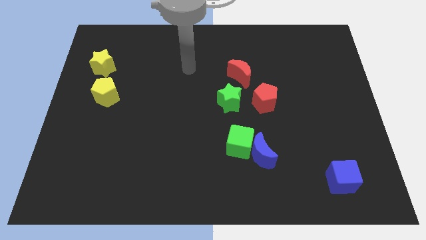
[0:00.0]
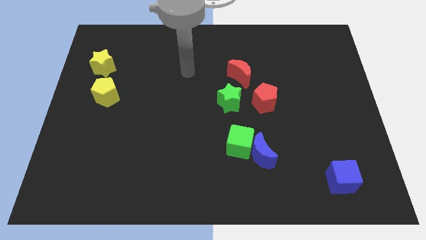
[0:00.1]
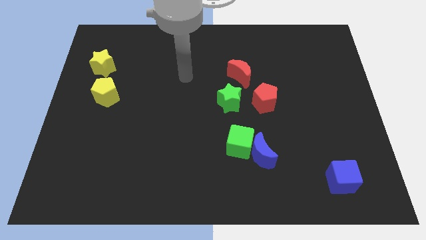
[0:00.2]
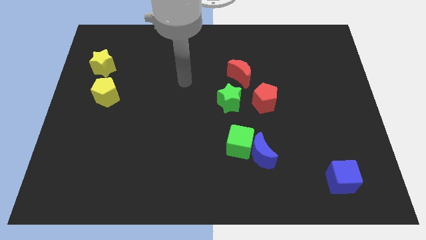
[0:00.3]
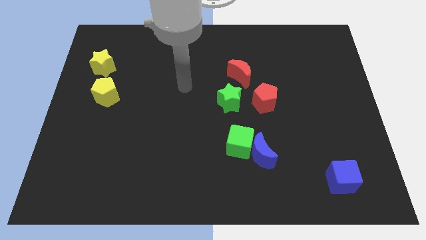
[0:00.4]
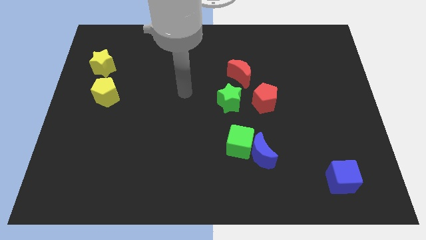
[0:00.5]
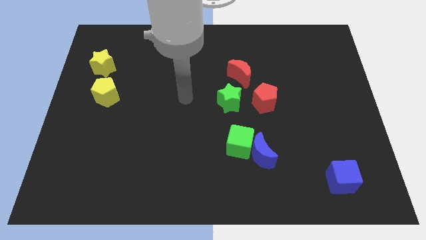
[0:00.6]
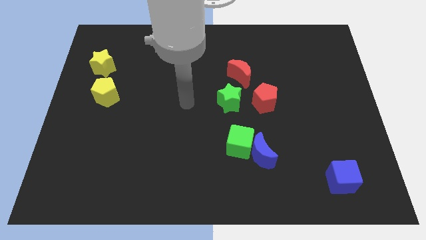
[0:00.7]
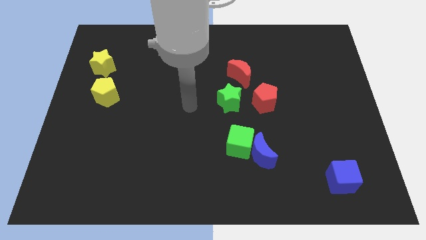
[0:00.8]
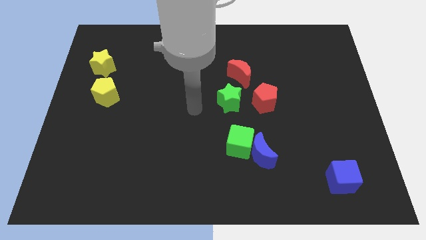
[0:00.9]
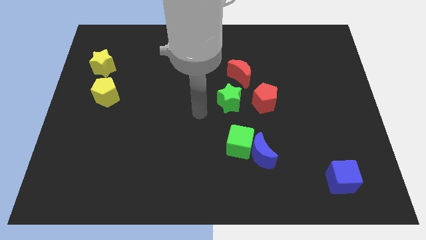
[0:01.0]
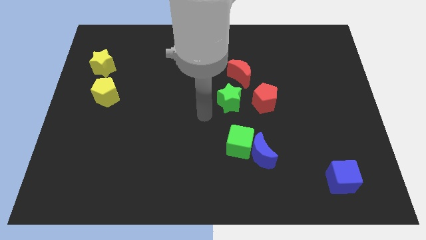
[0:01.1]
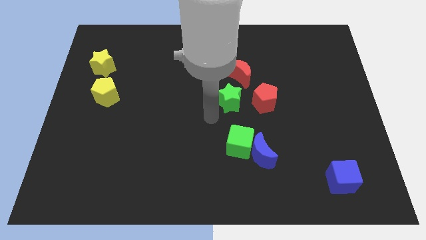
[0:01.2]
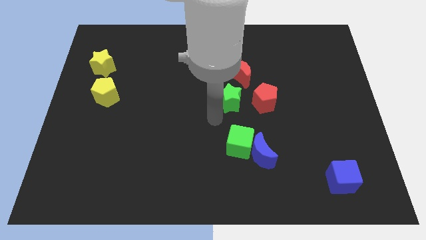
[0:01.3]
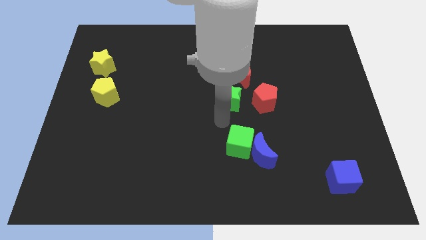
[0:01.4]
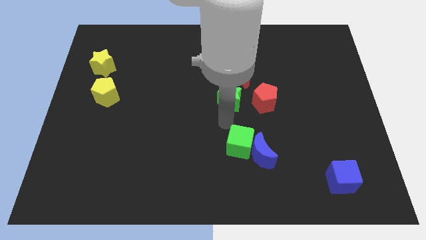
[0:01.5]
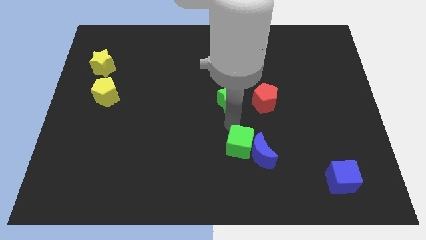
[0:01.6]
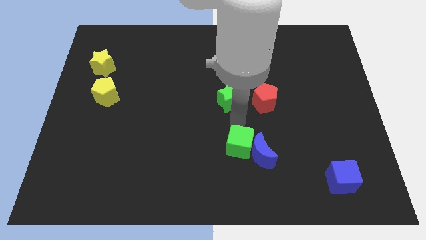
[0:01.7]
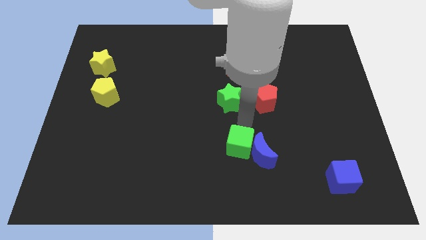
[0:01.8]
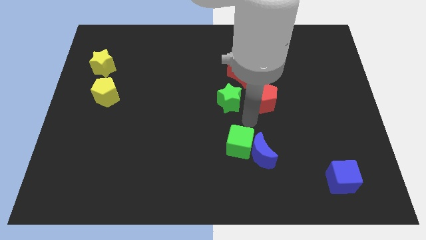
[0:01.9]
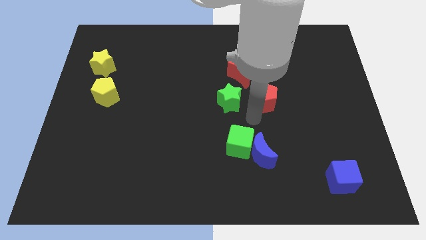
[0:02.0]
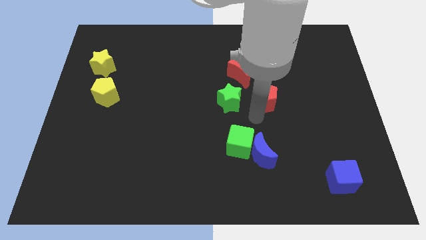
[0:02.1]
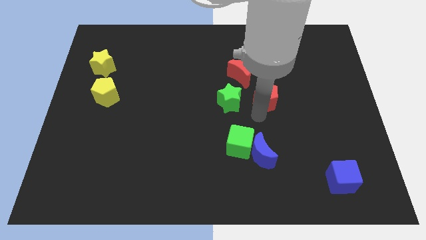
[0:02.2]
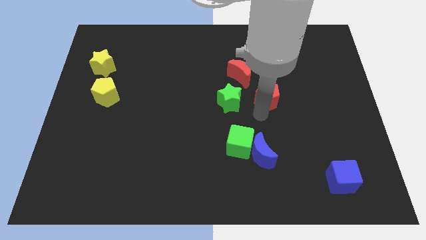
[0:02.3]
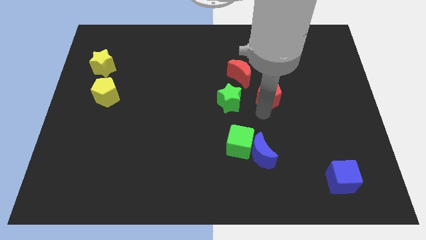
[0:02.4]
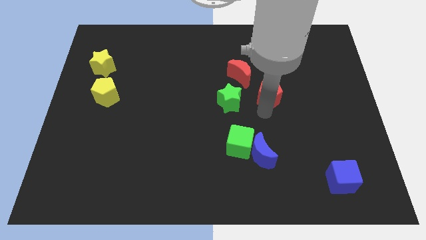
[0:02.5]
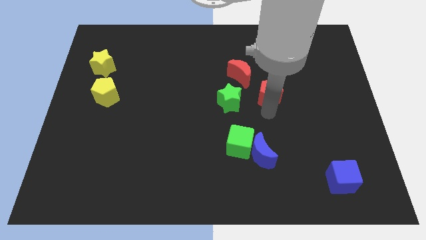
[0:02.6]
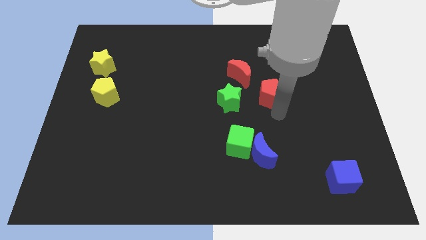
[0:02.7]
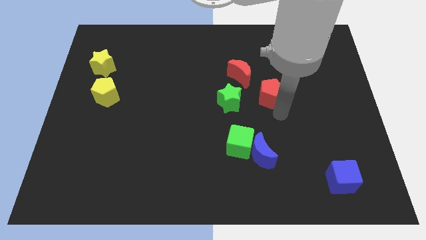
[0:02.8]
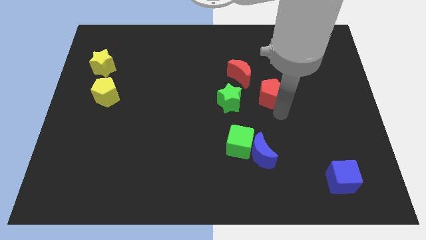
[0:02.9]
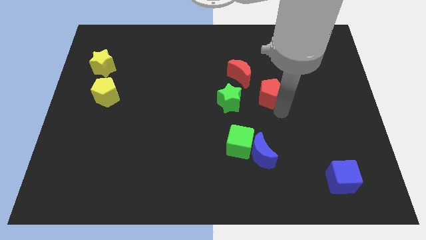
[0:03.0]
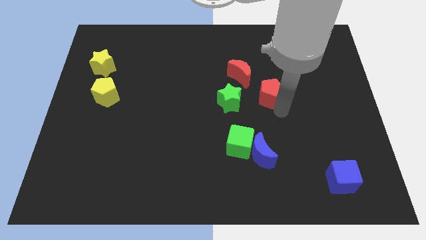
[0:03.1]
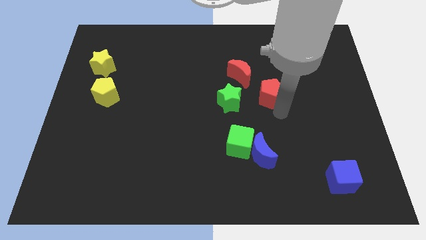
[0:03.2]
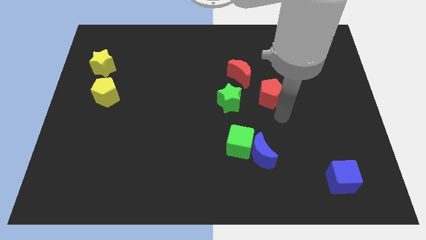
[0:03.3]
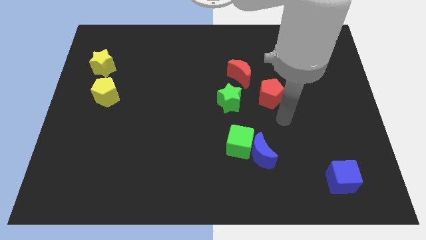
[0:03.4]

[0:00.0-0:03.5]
push the red pentagon slightly to the top

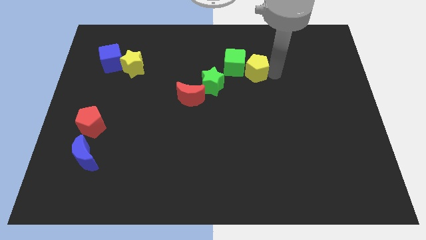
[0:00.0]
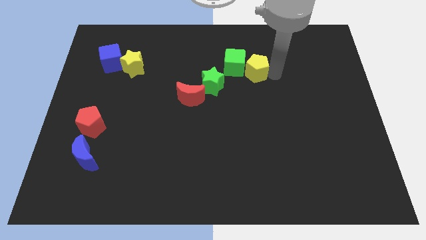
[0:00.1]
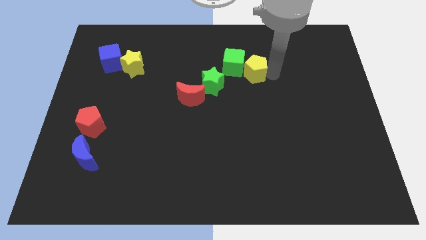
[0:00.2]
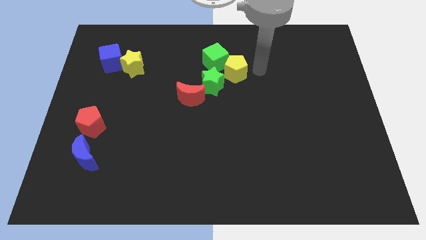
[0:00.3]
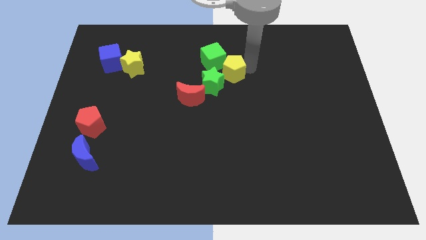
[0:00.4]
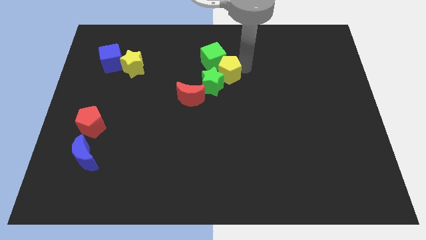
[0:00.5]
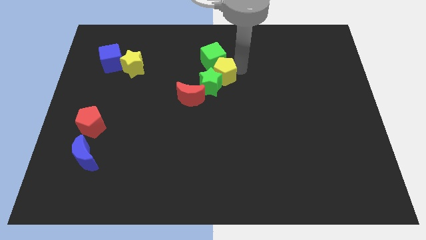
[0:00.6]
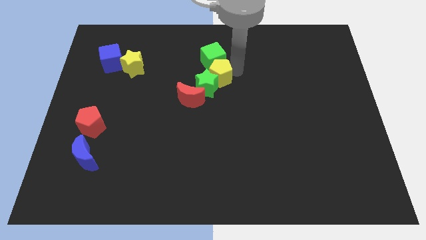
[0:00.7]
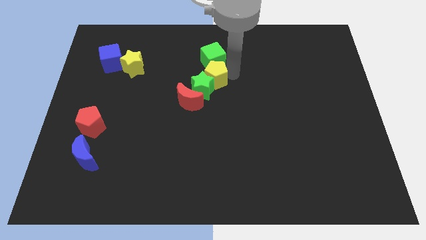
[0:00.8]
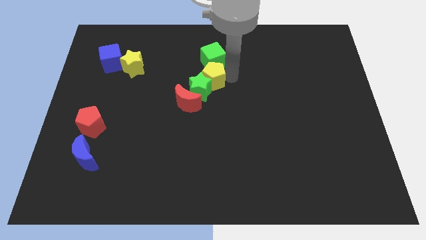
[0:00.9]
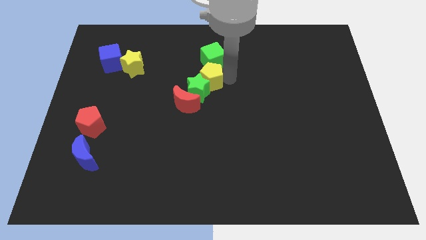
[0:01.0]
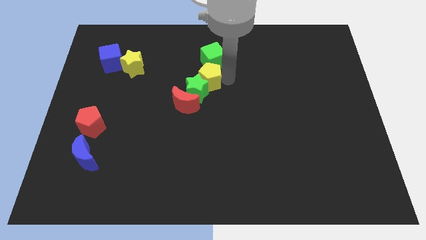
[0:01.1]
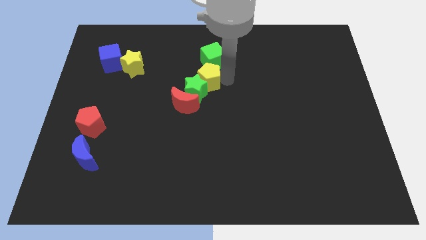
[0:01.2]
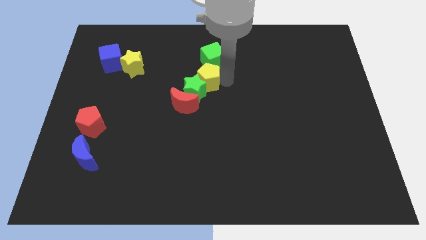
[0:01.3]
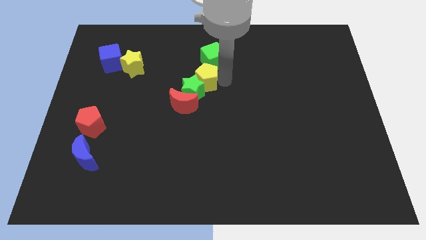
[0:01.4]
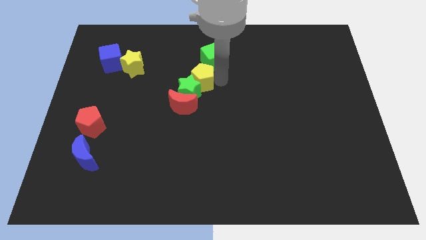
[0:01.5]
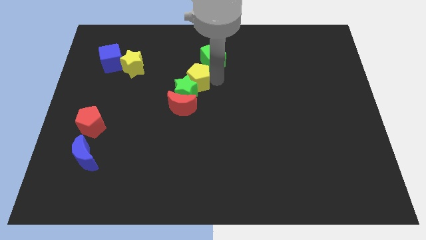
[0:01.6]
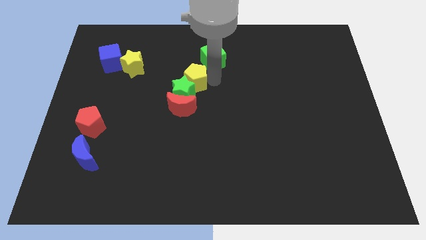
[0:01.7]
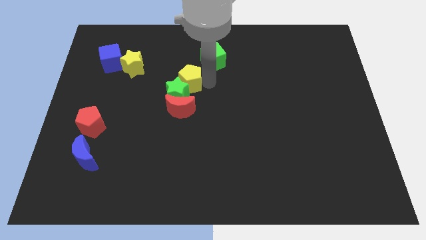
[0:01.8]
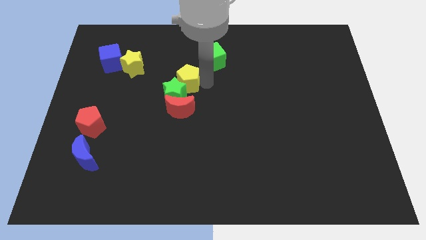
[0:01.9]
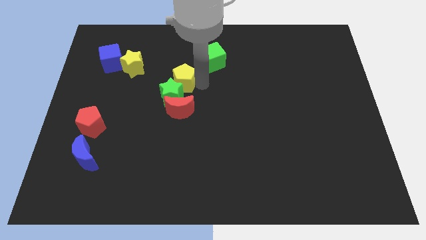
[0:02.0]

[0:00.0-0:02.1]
place the yellow pentagon between the green cube and the green star

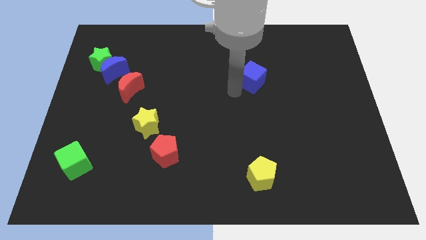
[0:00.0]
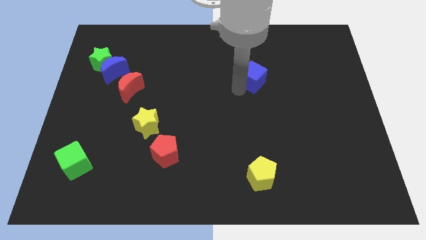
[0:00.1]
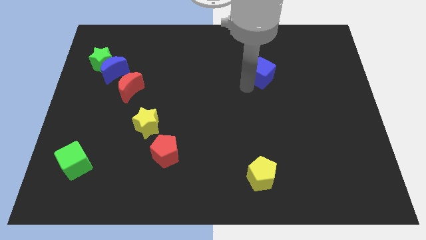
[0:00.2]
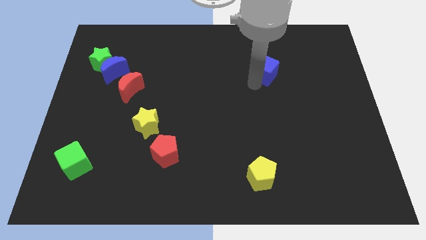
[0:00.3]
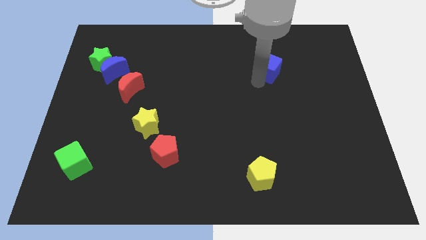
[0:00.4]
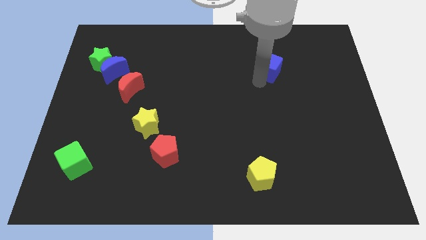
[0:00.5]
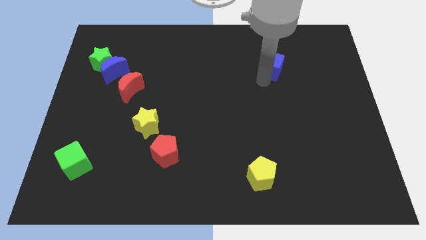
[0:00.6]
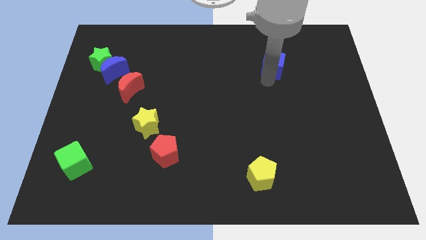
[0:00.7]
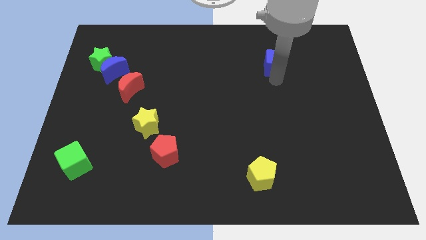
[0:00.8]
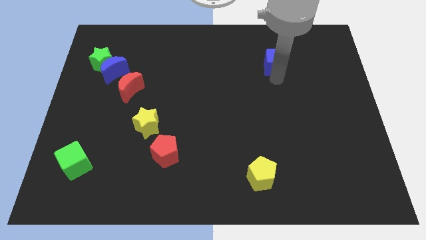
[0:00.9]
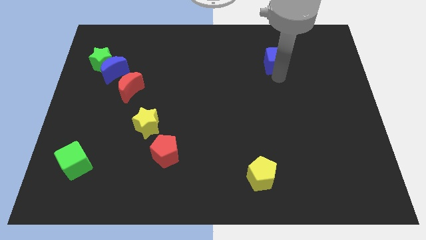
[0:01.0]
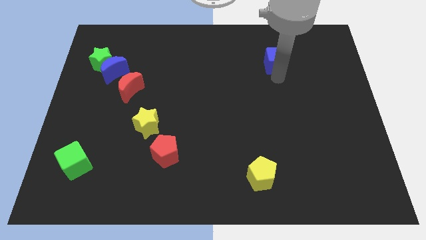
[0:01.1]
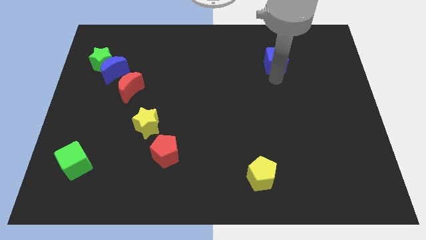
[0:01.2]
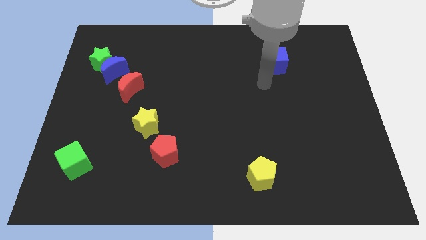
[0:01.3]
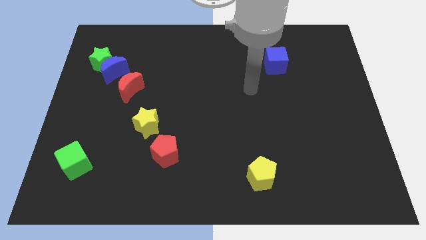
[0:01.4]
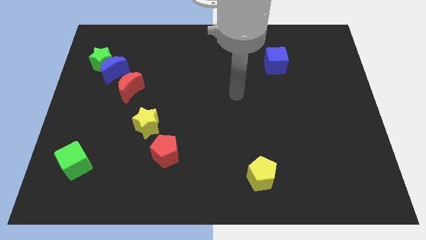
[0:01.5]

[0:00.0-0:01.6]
push the blue cube towards the top right

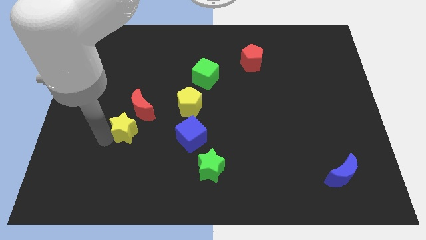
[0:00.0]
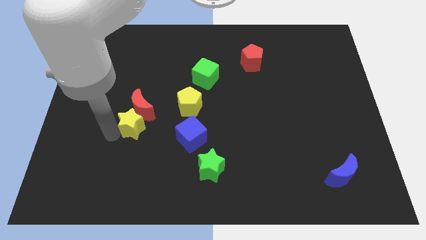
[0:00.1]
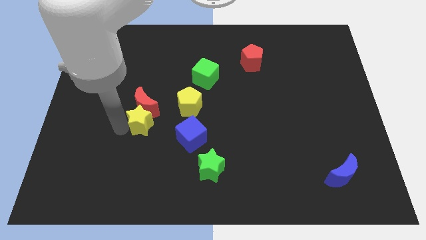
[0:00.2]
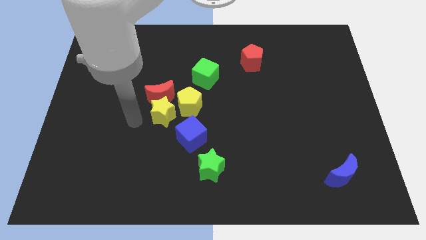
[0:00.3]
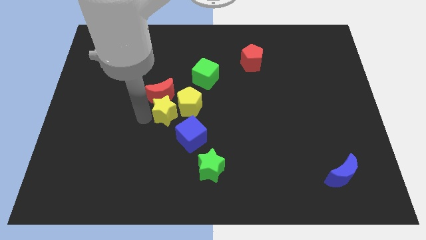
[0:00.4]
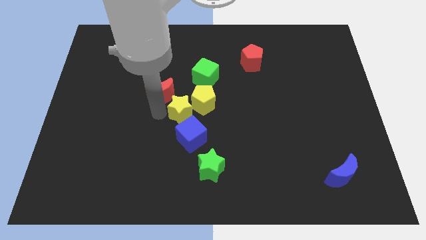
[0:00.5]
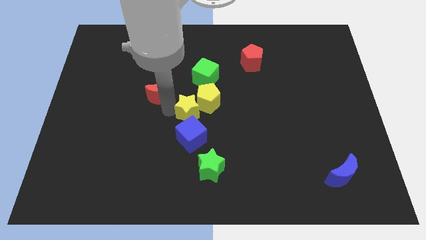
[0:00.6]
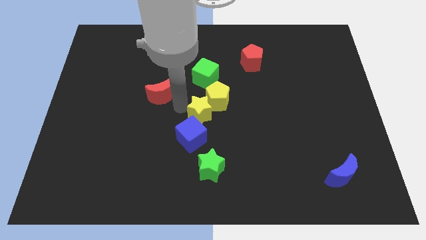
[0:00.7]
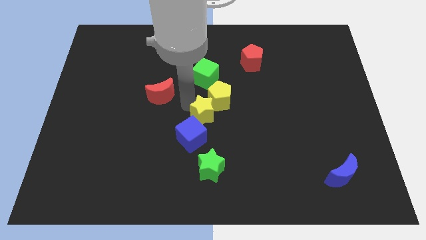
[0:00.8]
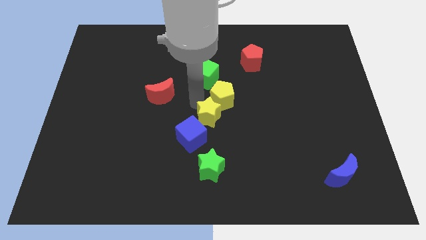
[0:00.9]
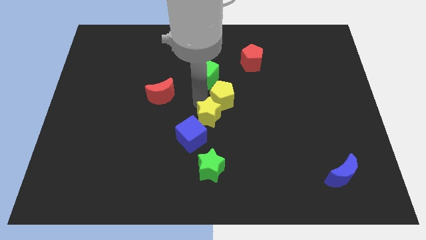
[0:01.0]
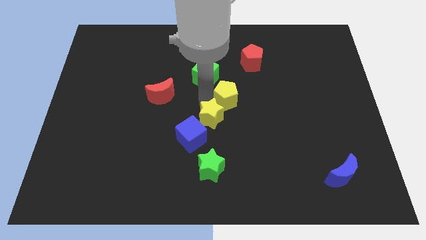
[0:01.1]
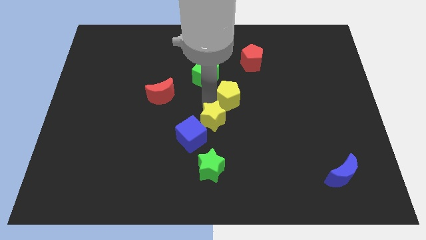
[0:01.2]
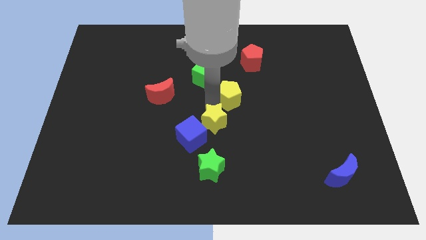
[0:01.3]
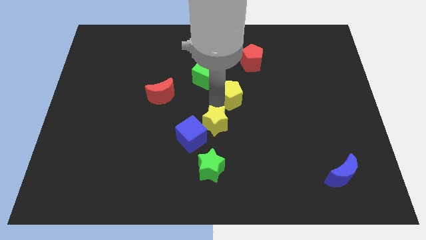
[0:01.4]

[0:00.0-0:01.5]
place the yellow star towards the center of the board

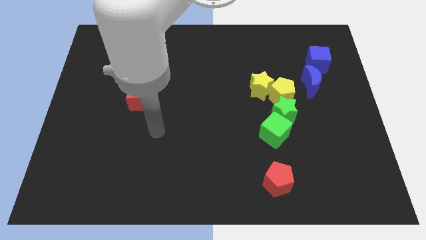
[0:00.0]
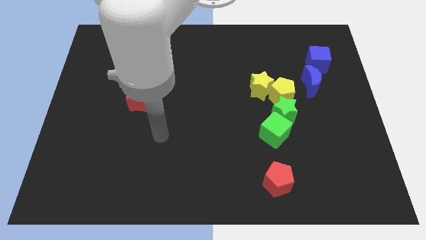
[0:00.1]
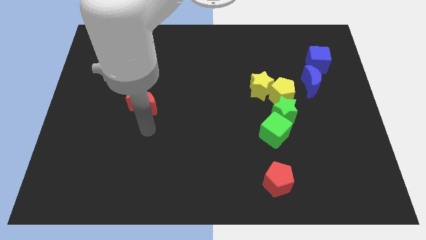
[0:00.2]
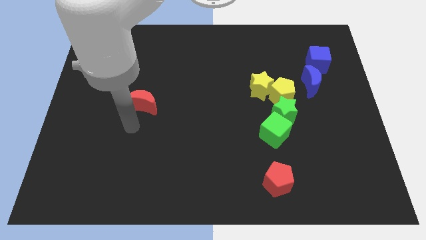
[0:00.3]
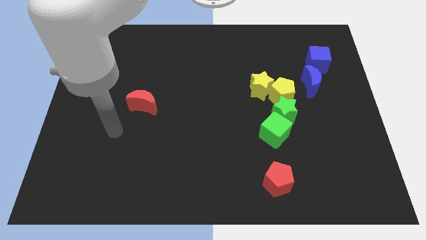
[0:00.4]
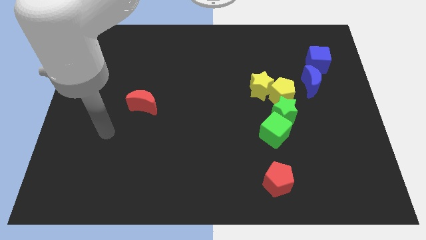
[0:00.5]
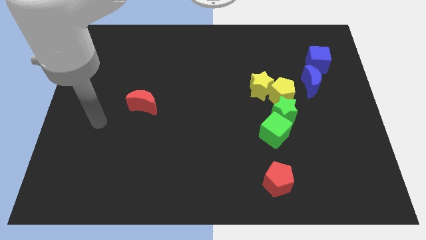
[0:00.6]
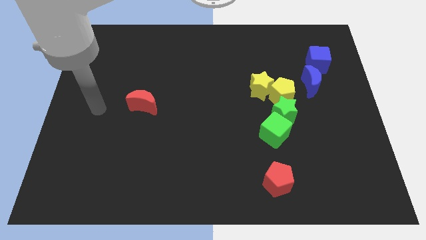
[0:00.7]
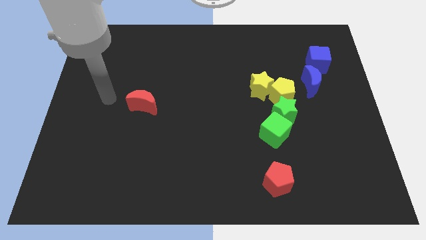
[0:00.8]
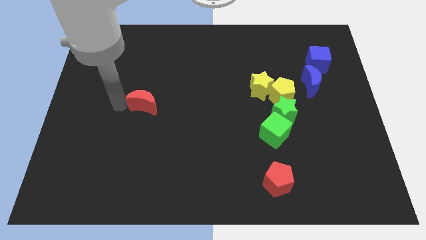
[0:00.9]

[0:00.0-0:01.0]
touch the left side of the red crescent
